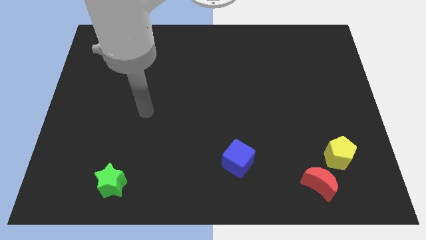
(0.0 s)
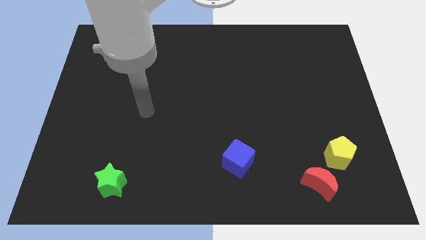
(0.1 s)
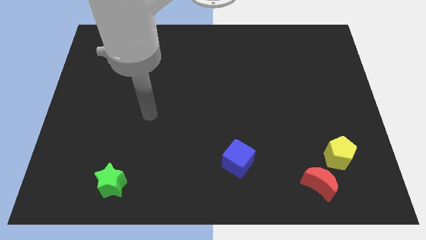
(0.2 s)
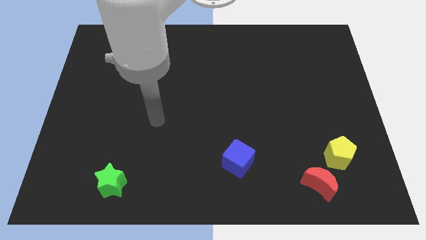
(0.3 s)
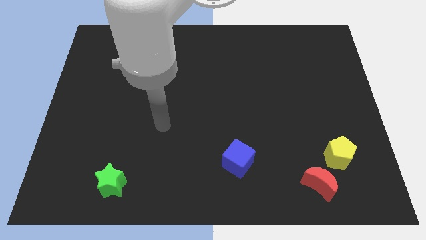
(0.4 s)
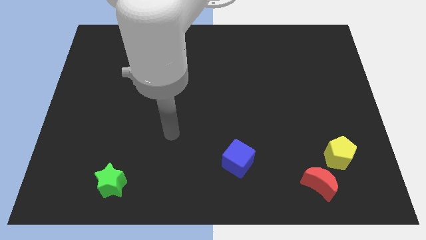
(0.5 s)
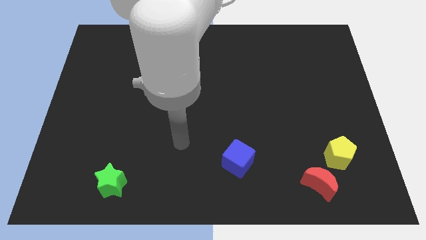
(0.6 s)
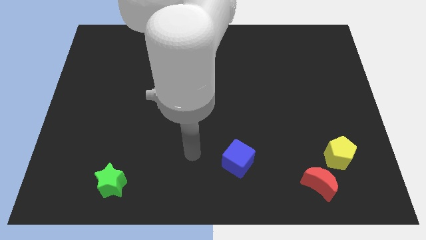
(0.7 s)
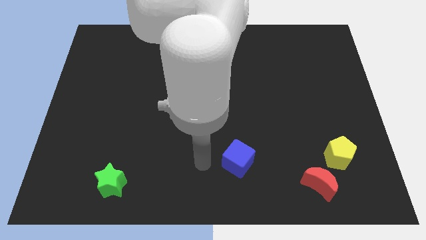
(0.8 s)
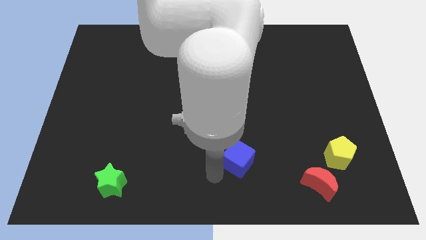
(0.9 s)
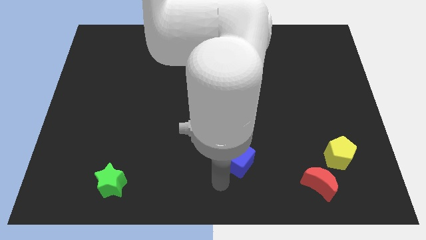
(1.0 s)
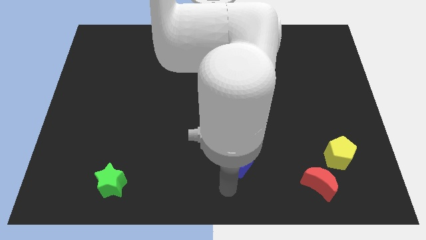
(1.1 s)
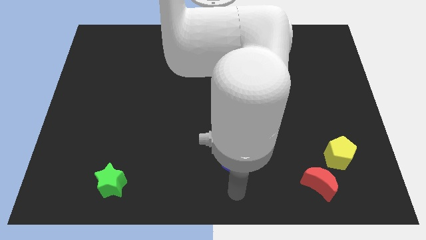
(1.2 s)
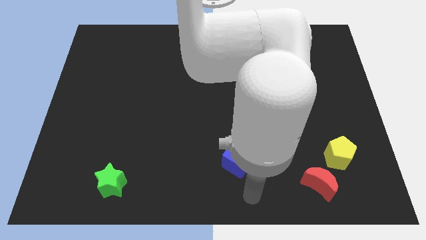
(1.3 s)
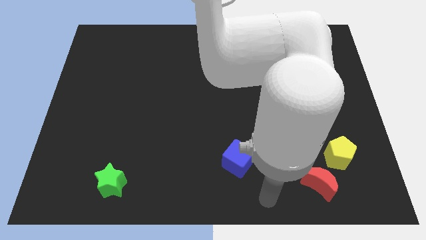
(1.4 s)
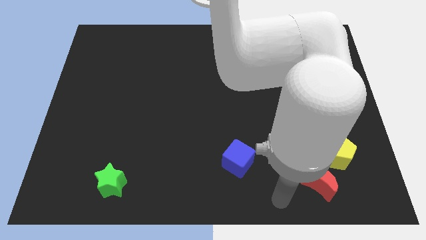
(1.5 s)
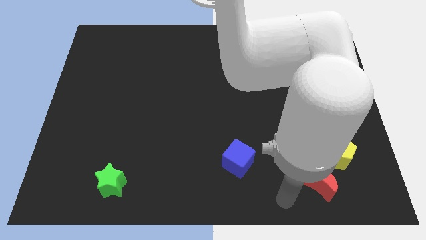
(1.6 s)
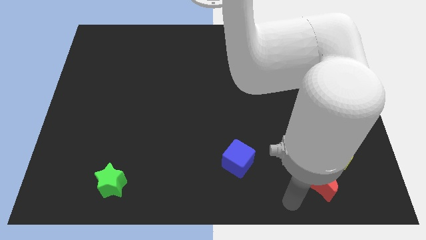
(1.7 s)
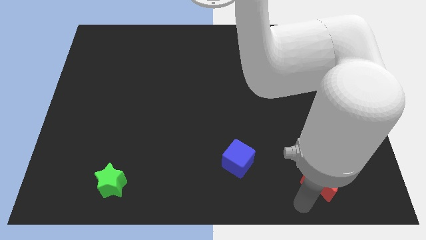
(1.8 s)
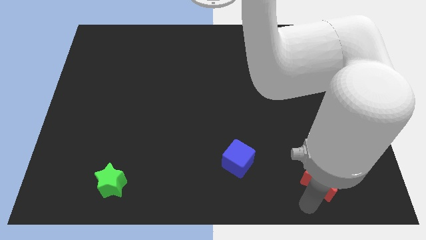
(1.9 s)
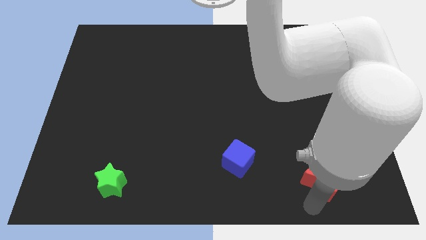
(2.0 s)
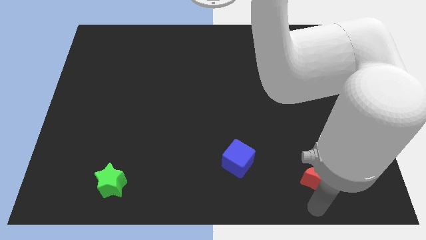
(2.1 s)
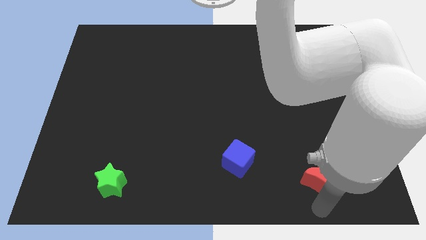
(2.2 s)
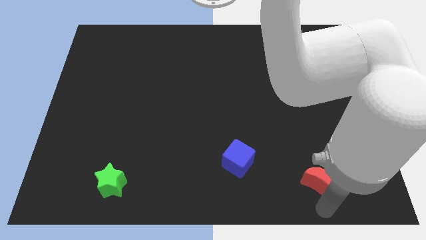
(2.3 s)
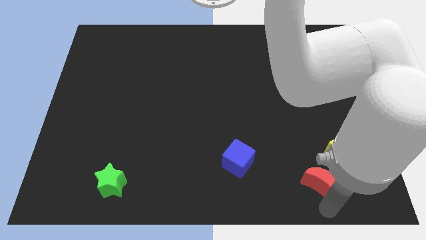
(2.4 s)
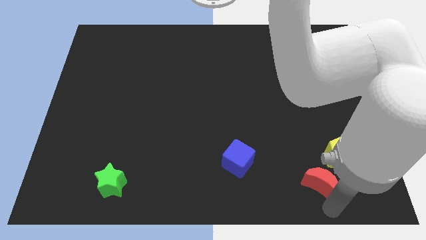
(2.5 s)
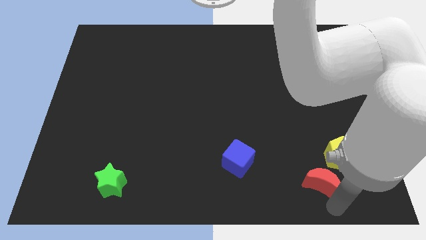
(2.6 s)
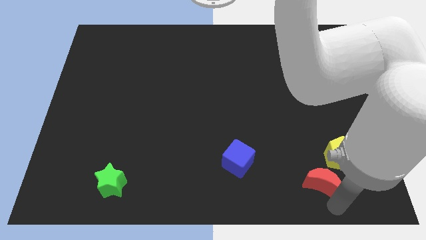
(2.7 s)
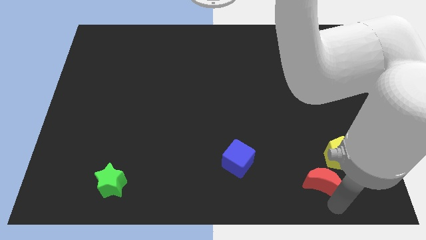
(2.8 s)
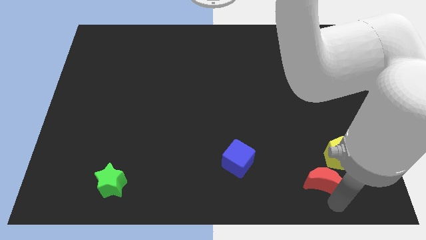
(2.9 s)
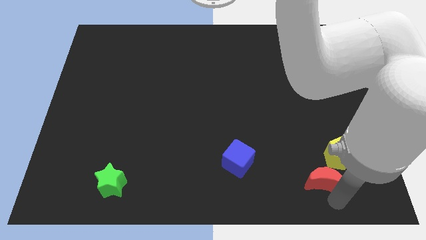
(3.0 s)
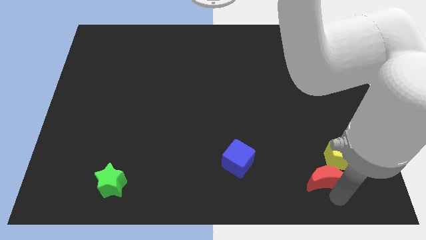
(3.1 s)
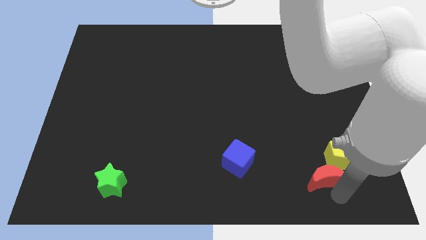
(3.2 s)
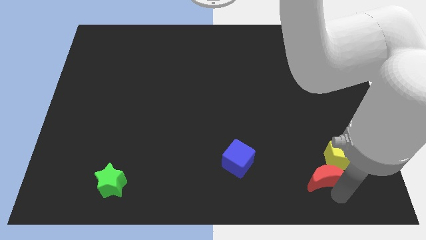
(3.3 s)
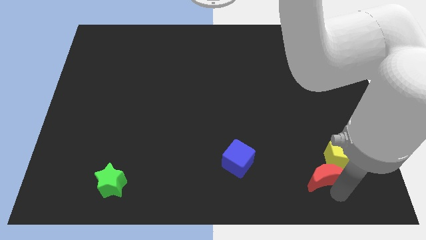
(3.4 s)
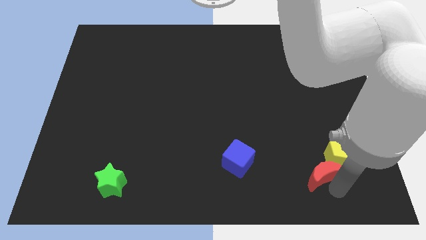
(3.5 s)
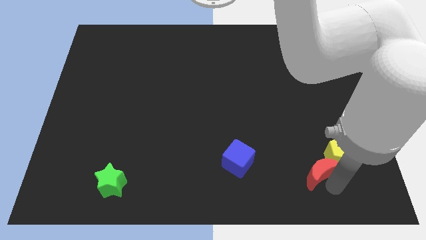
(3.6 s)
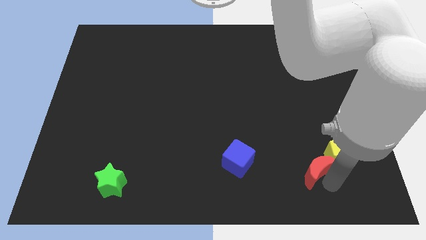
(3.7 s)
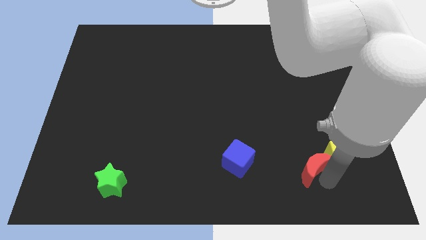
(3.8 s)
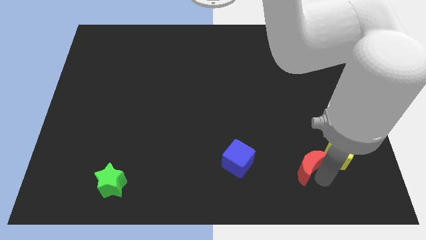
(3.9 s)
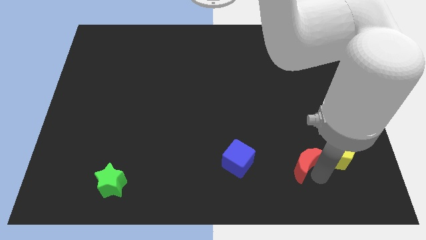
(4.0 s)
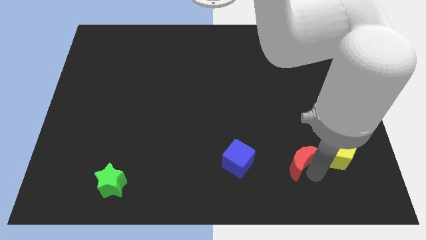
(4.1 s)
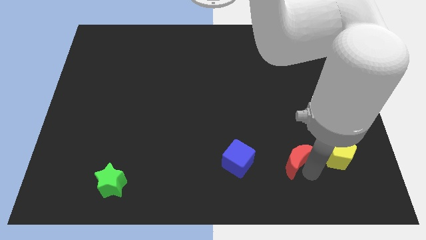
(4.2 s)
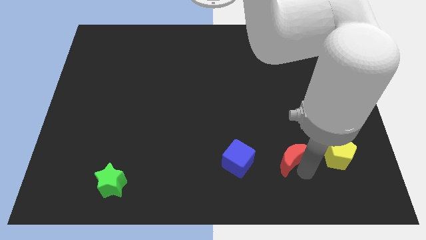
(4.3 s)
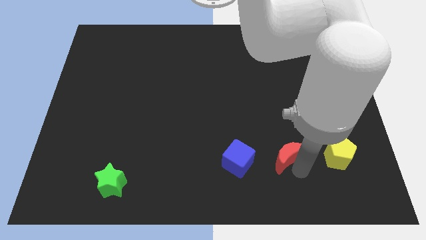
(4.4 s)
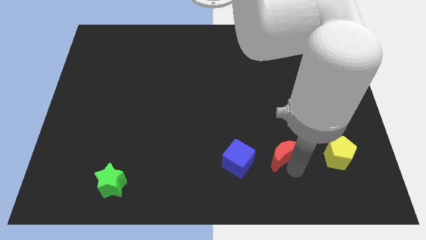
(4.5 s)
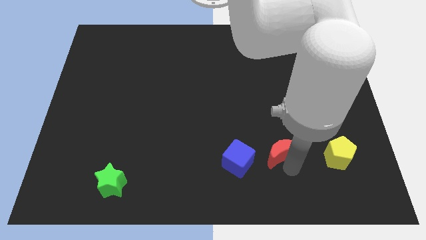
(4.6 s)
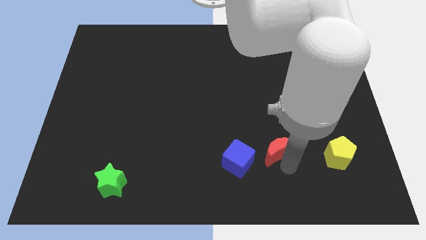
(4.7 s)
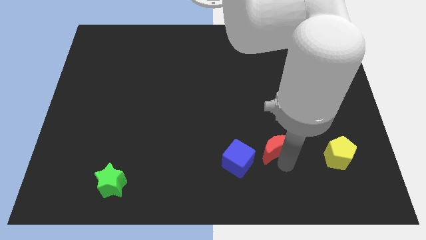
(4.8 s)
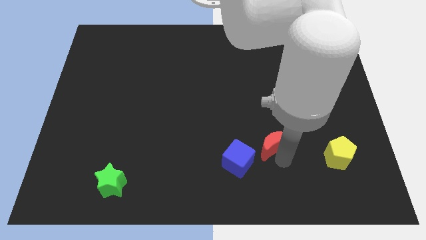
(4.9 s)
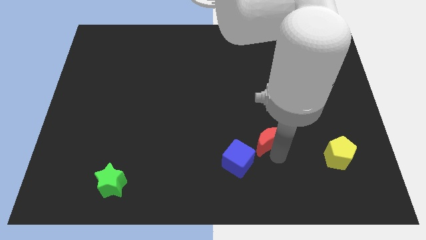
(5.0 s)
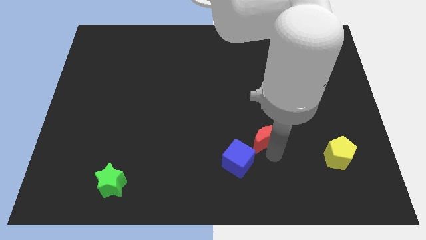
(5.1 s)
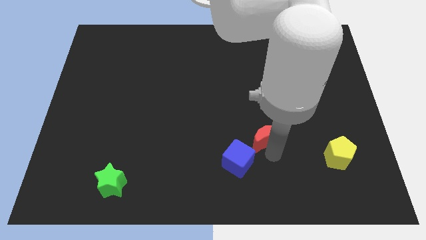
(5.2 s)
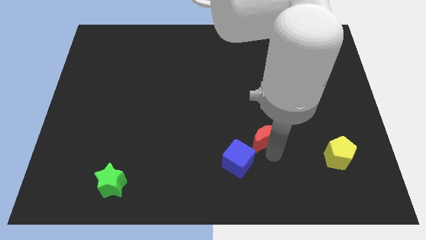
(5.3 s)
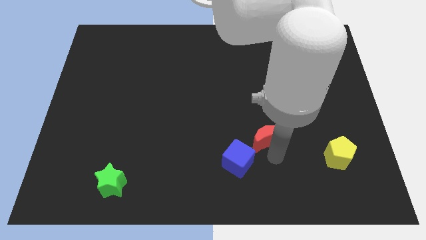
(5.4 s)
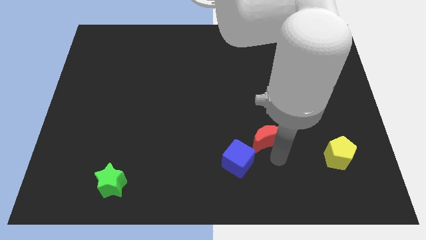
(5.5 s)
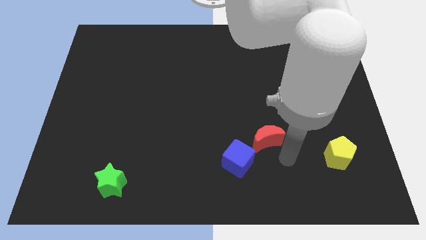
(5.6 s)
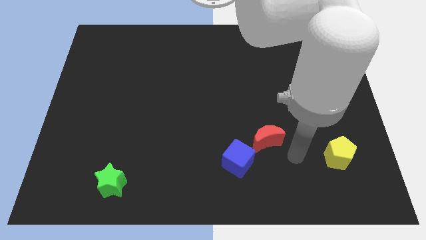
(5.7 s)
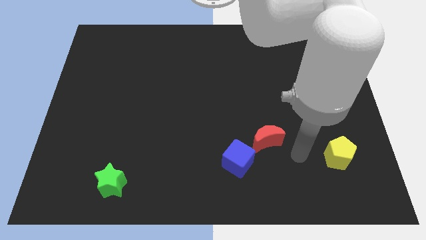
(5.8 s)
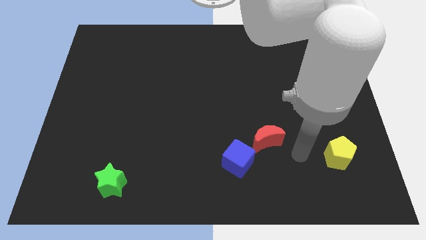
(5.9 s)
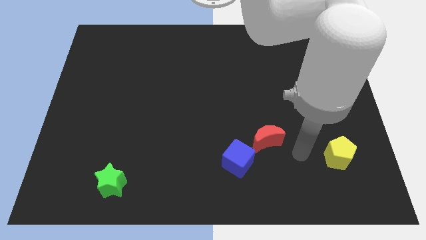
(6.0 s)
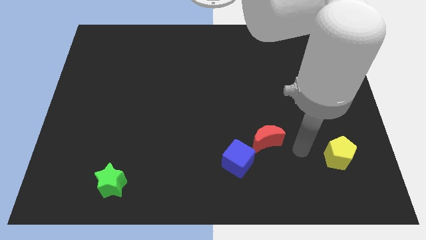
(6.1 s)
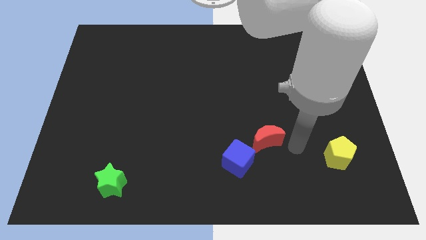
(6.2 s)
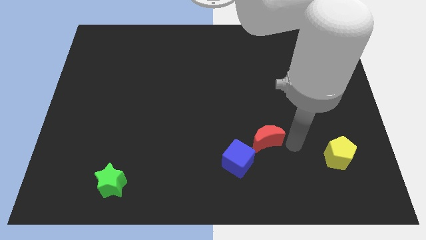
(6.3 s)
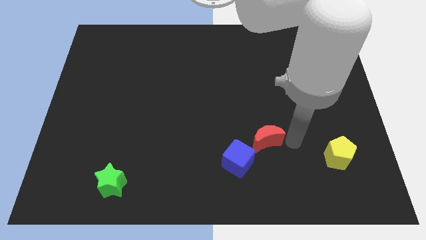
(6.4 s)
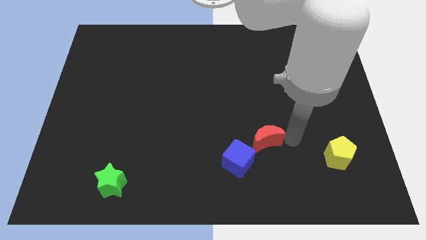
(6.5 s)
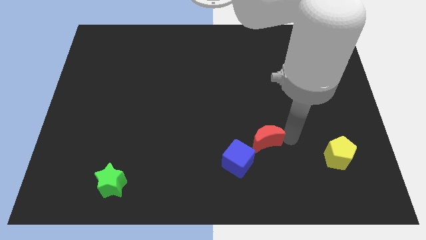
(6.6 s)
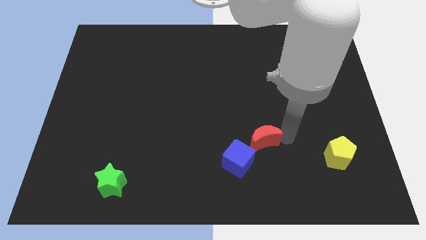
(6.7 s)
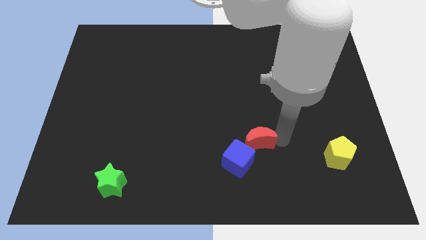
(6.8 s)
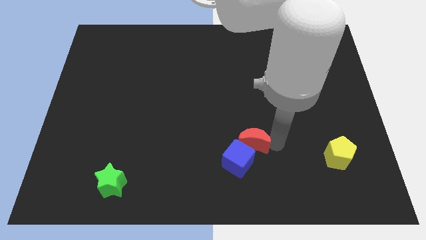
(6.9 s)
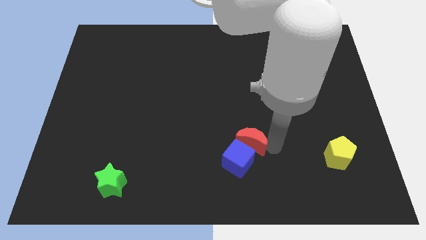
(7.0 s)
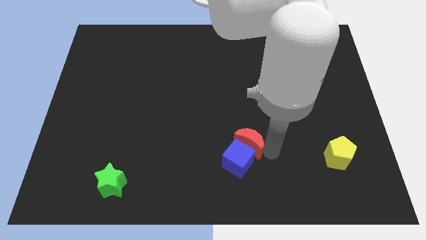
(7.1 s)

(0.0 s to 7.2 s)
slide the red block next to the blue cube

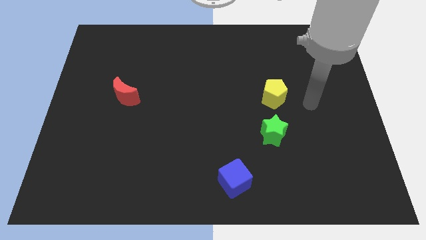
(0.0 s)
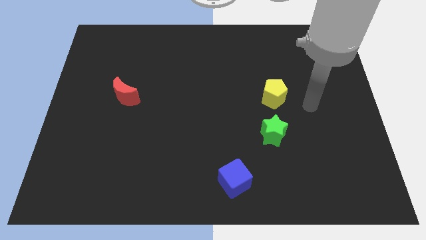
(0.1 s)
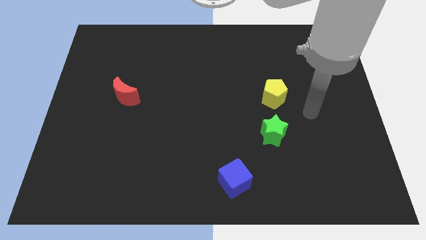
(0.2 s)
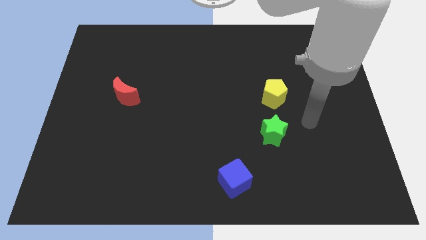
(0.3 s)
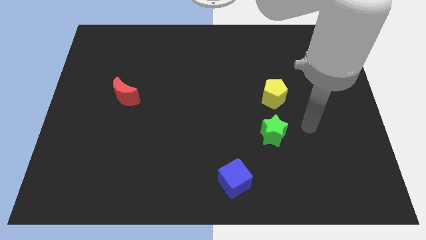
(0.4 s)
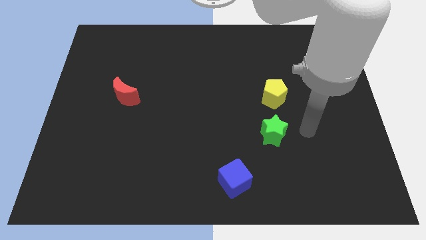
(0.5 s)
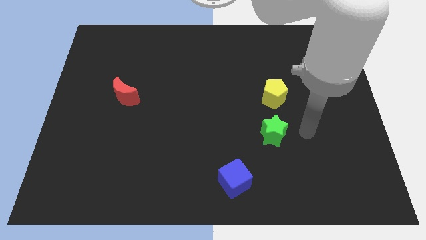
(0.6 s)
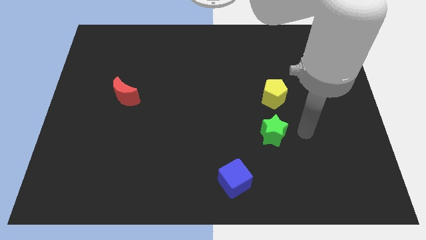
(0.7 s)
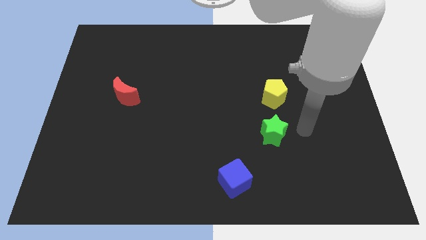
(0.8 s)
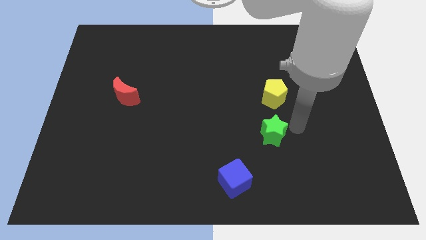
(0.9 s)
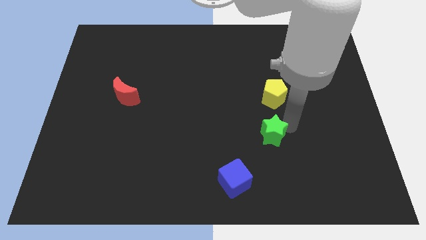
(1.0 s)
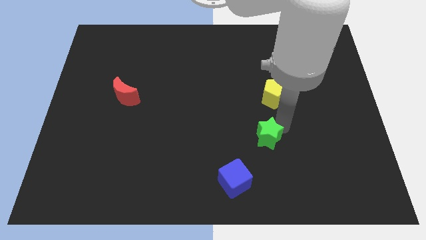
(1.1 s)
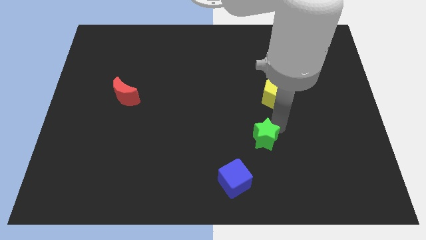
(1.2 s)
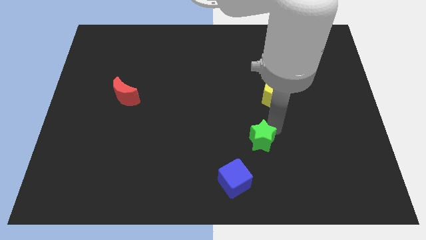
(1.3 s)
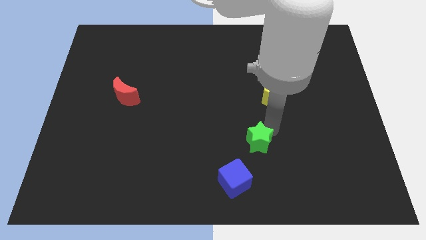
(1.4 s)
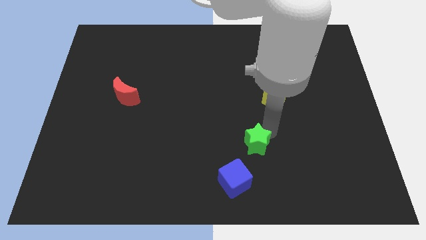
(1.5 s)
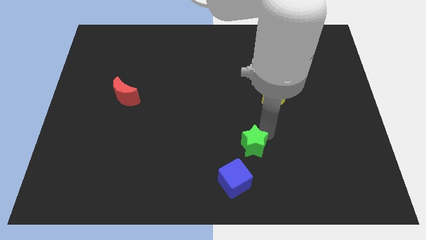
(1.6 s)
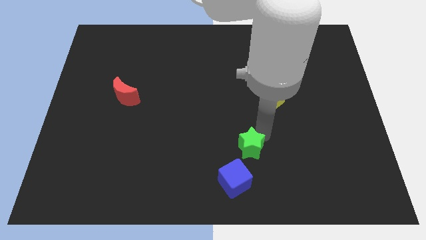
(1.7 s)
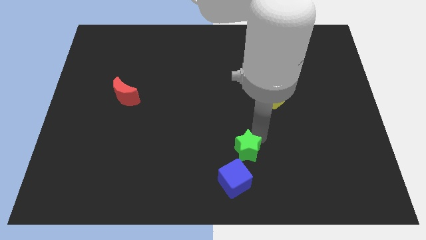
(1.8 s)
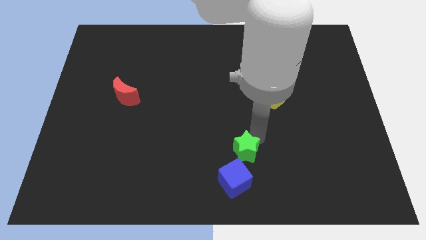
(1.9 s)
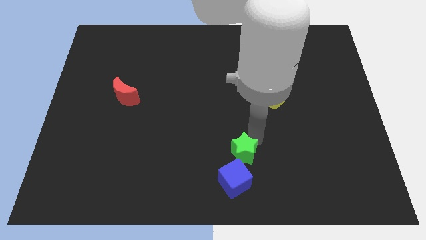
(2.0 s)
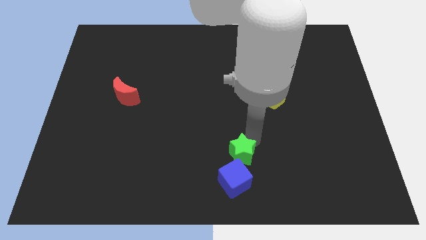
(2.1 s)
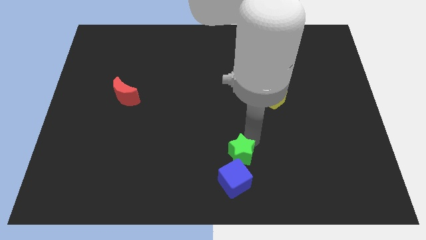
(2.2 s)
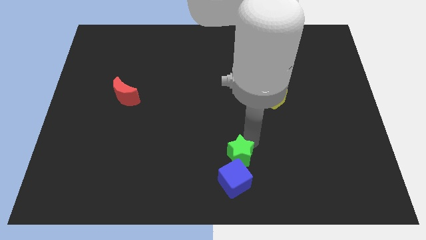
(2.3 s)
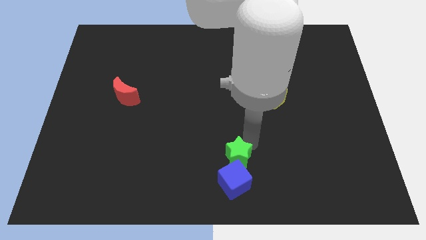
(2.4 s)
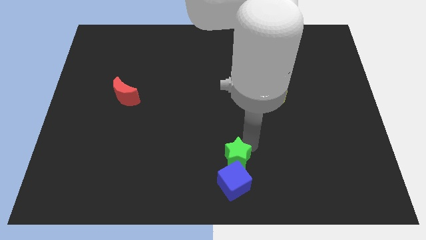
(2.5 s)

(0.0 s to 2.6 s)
move the star towards the blue cube
